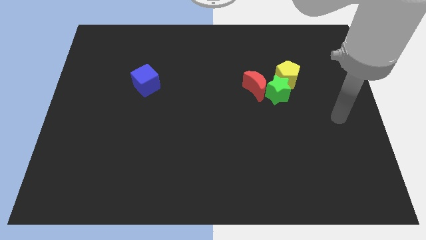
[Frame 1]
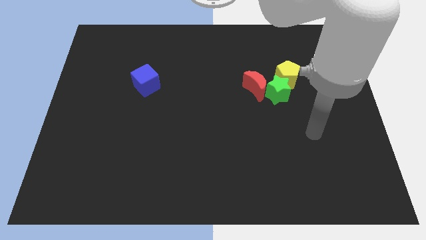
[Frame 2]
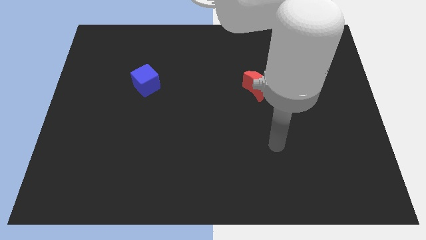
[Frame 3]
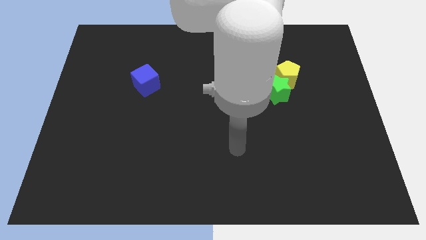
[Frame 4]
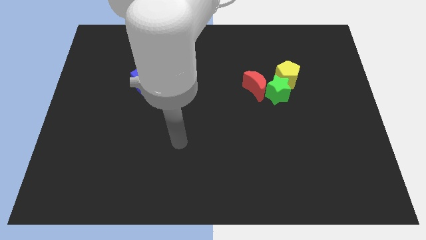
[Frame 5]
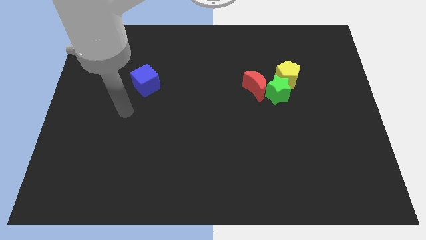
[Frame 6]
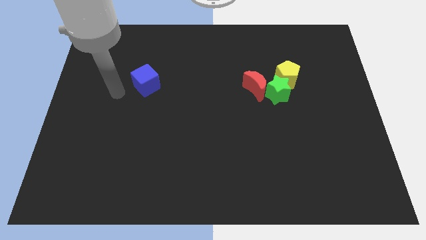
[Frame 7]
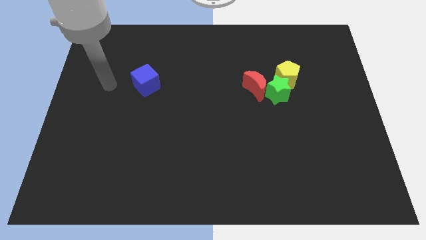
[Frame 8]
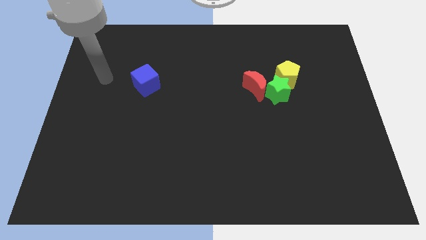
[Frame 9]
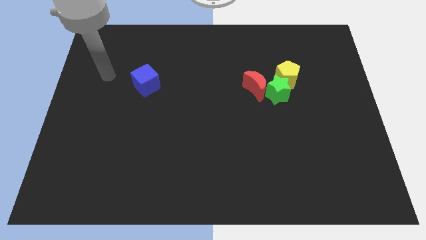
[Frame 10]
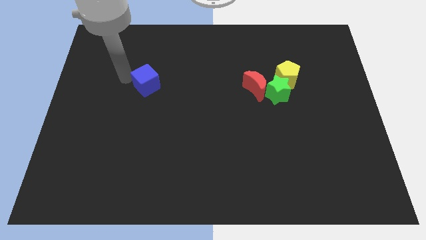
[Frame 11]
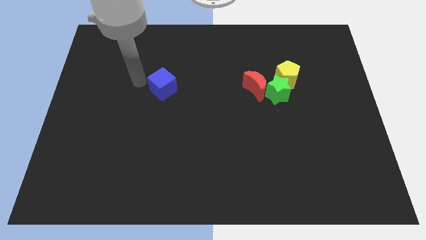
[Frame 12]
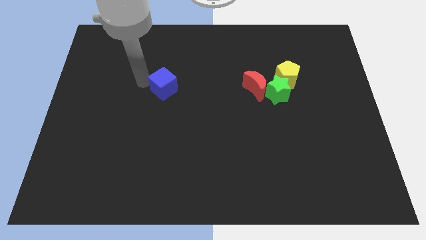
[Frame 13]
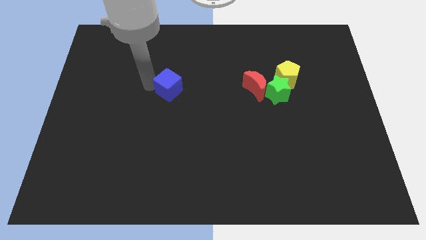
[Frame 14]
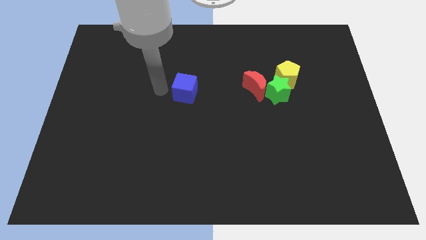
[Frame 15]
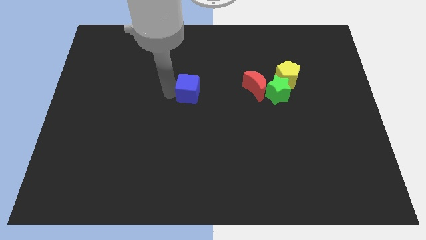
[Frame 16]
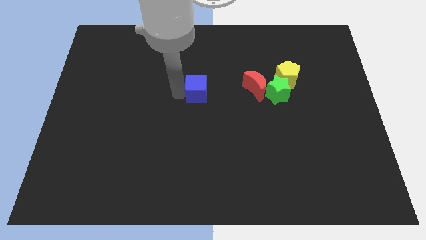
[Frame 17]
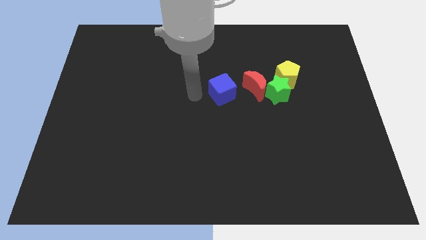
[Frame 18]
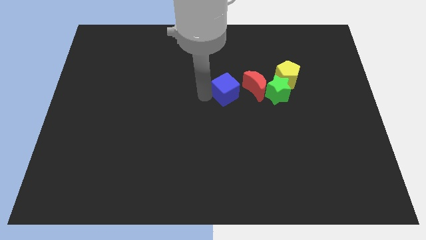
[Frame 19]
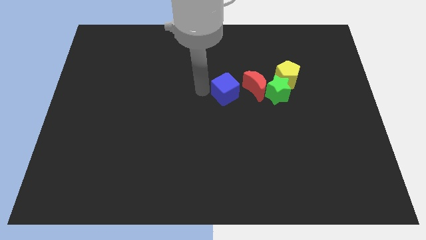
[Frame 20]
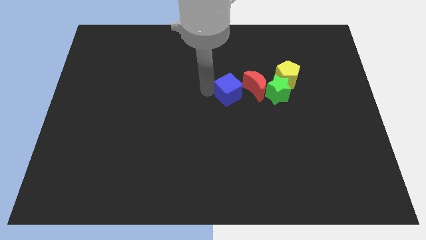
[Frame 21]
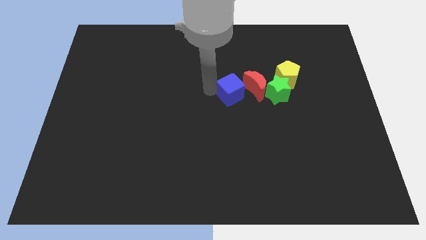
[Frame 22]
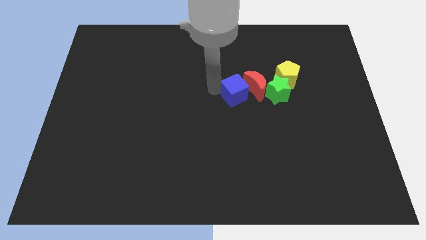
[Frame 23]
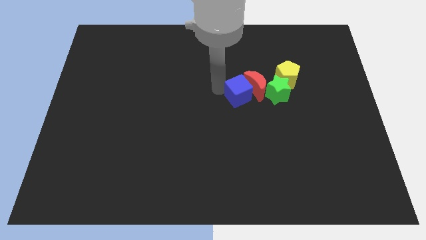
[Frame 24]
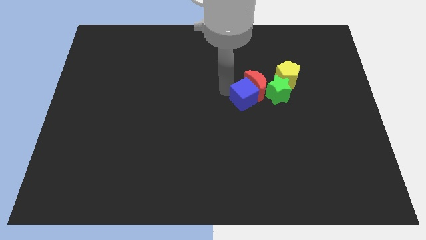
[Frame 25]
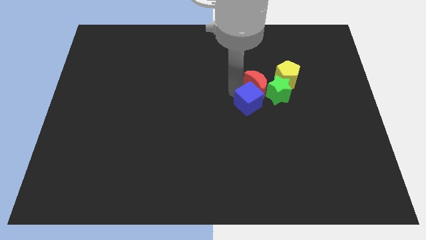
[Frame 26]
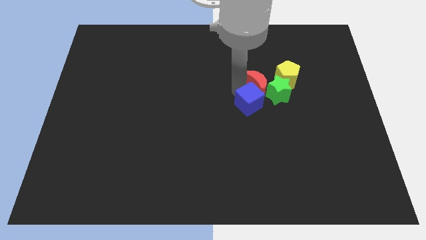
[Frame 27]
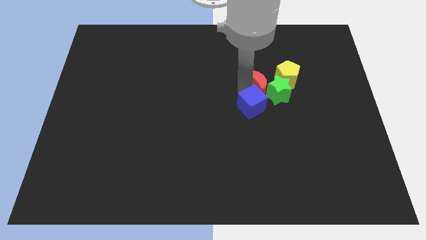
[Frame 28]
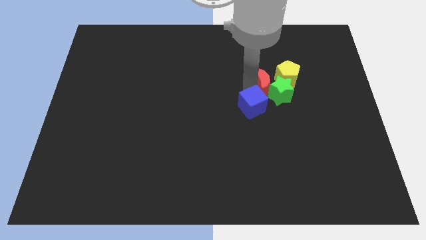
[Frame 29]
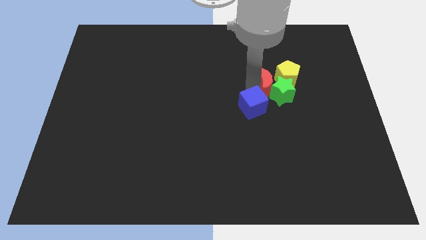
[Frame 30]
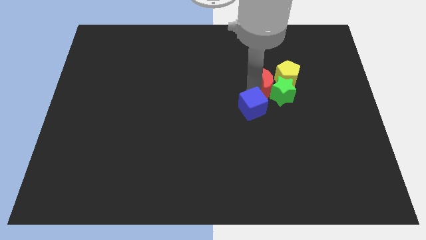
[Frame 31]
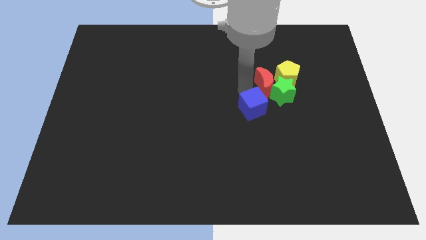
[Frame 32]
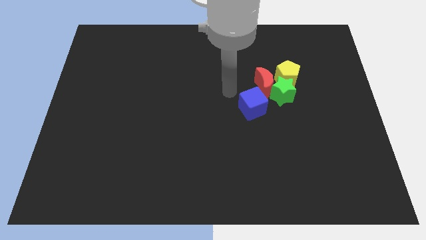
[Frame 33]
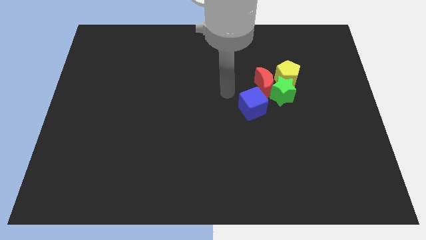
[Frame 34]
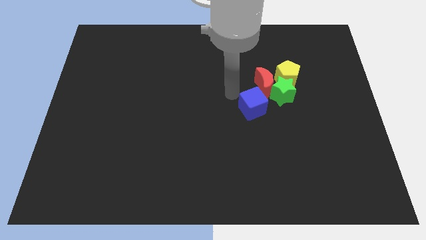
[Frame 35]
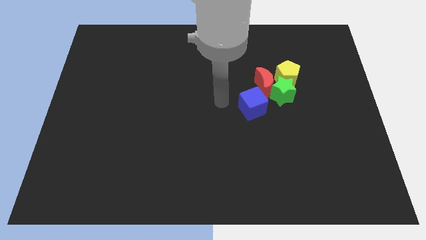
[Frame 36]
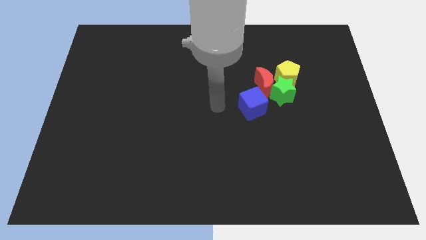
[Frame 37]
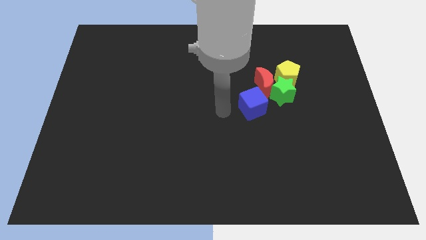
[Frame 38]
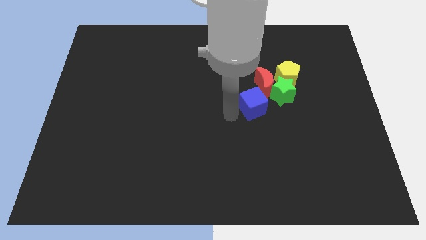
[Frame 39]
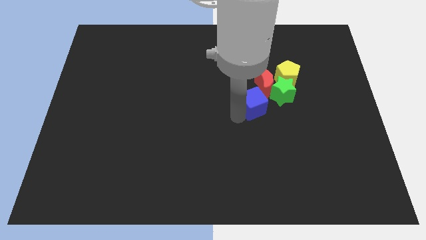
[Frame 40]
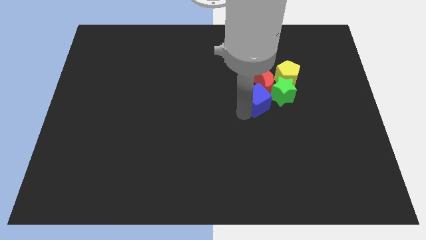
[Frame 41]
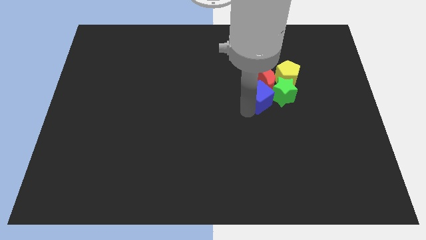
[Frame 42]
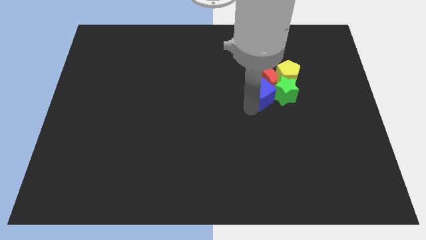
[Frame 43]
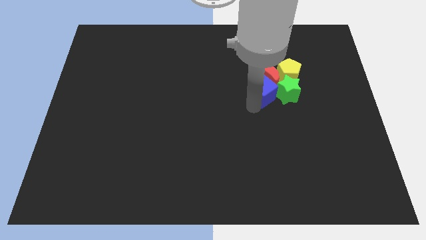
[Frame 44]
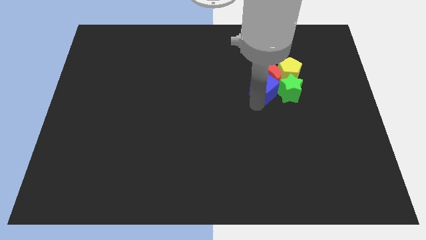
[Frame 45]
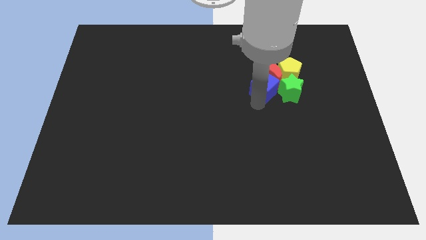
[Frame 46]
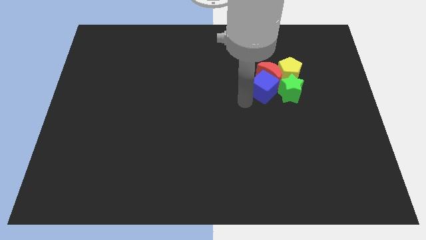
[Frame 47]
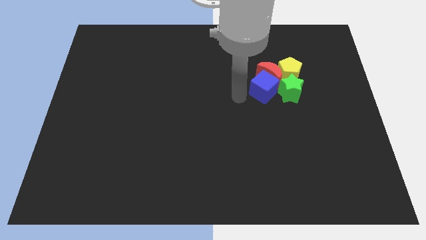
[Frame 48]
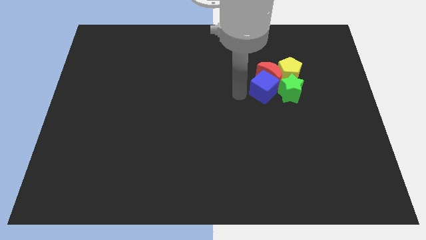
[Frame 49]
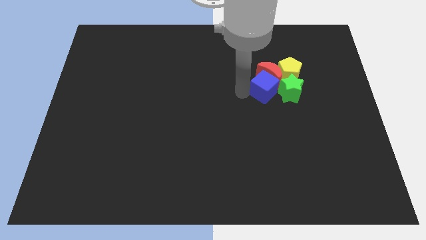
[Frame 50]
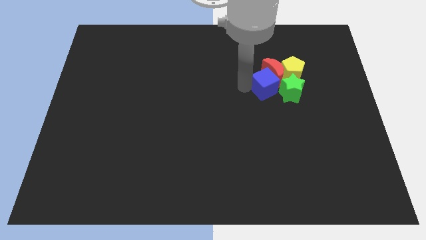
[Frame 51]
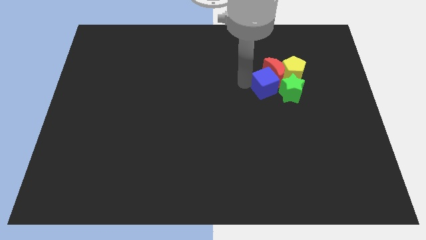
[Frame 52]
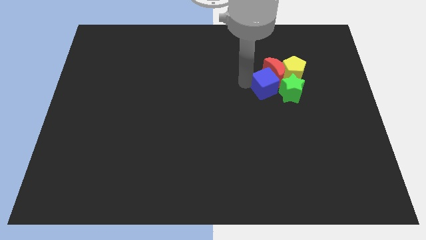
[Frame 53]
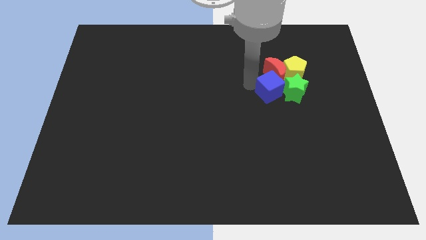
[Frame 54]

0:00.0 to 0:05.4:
push the blue cube next to the star

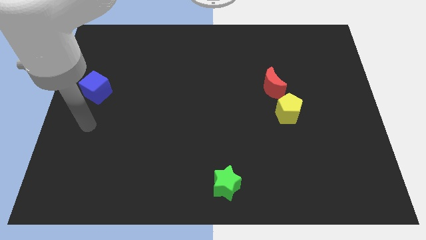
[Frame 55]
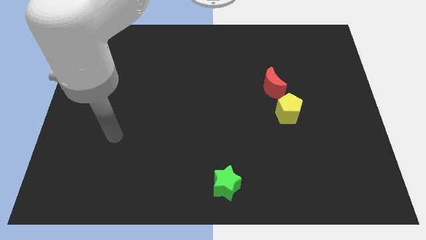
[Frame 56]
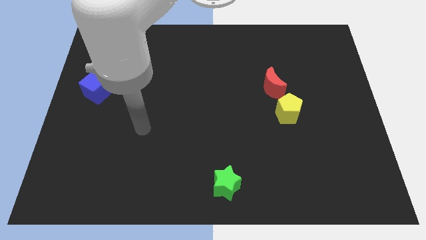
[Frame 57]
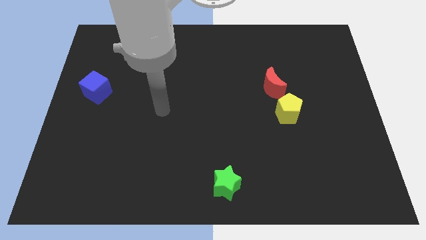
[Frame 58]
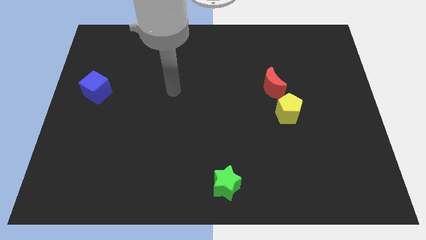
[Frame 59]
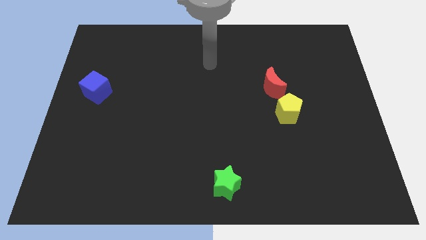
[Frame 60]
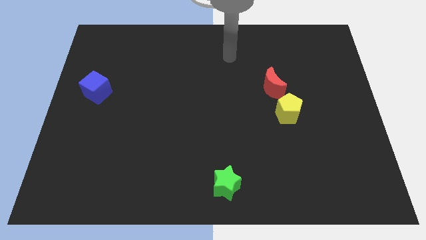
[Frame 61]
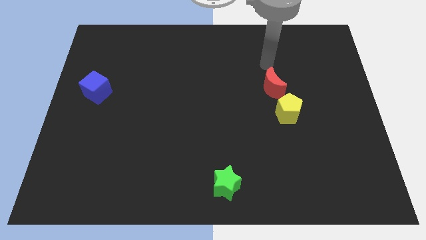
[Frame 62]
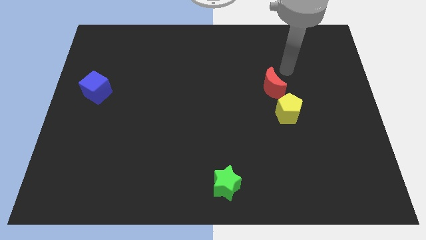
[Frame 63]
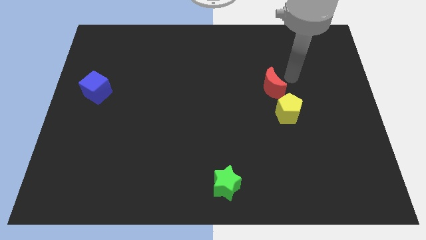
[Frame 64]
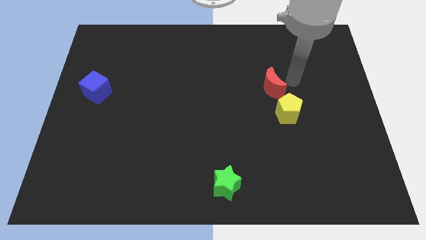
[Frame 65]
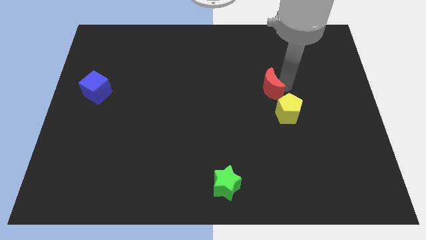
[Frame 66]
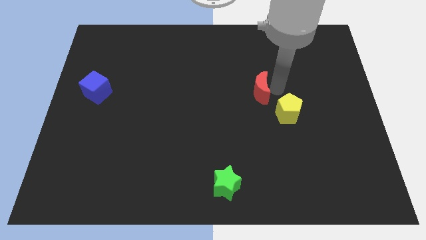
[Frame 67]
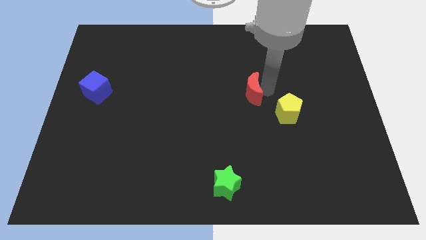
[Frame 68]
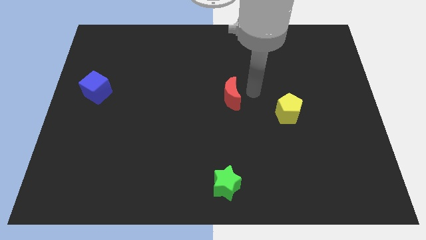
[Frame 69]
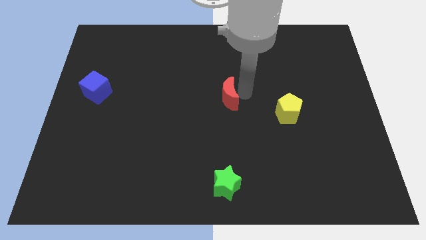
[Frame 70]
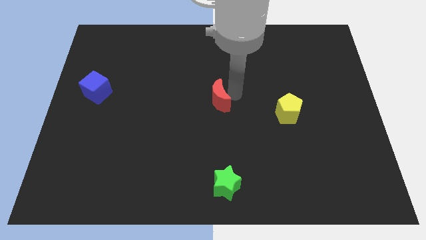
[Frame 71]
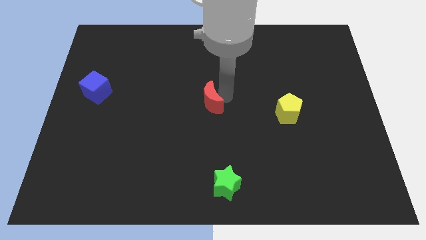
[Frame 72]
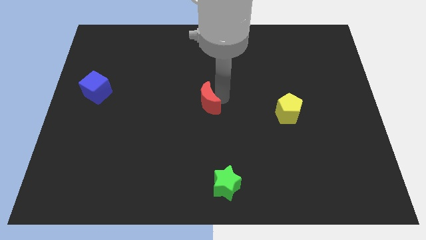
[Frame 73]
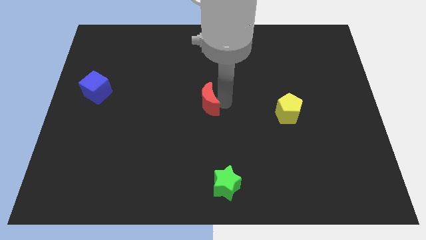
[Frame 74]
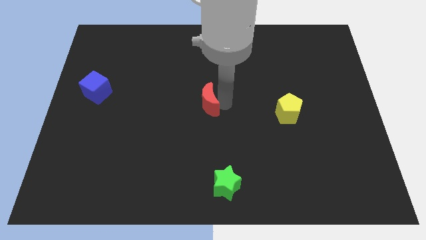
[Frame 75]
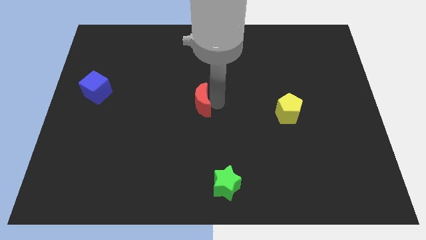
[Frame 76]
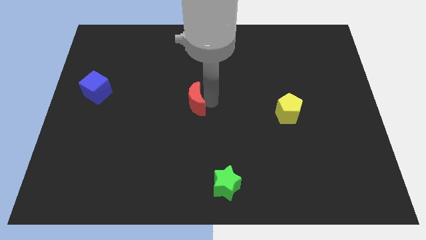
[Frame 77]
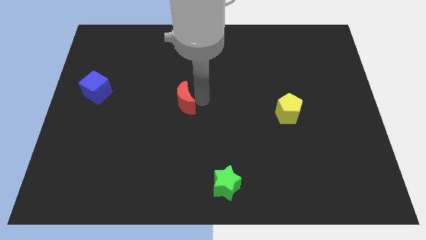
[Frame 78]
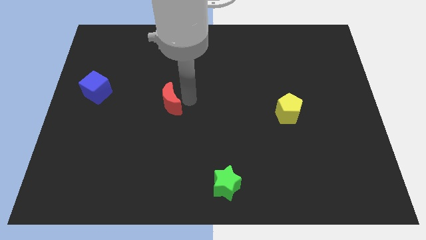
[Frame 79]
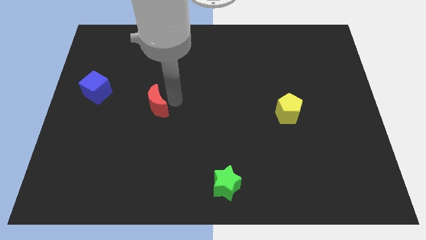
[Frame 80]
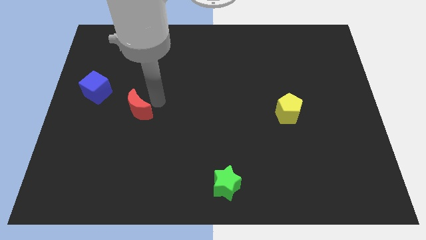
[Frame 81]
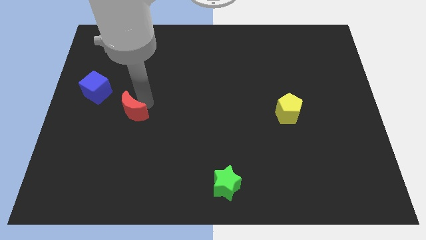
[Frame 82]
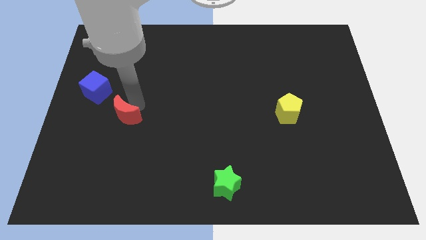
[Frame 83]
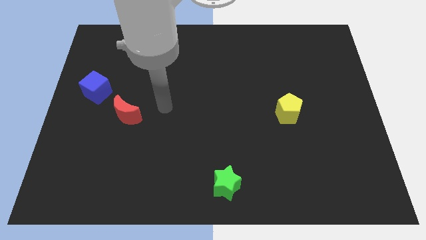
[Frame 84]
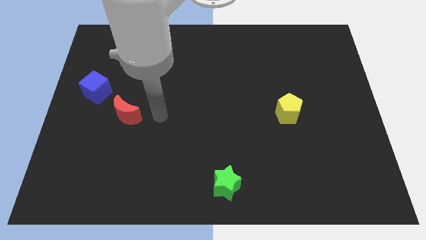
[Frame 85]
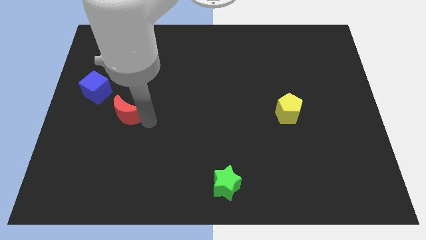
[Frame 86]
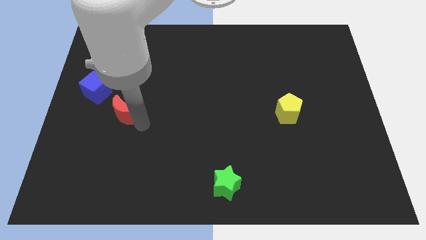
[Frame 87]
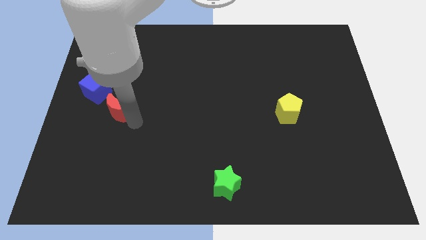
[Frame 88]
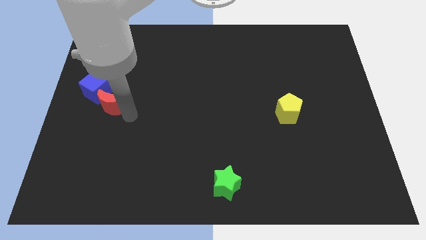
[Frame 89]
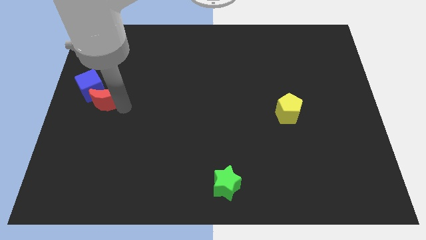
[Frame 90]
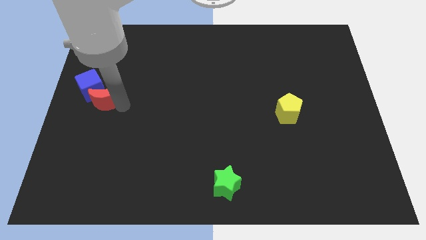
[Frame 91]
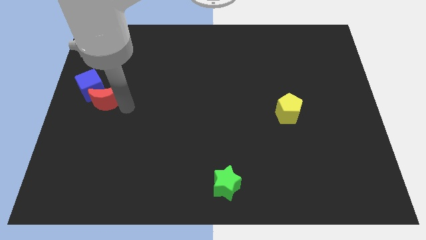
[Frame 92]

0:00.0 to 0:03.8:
slide the red moon close to the blue block
